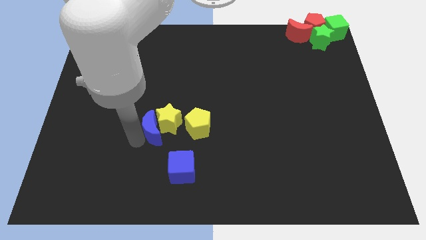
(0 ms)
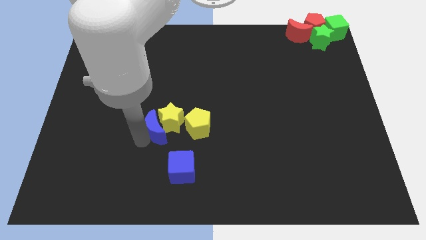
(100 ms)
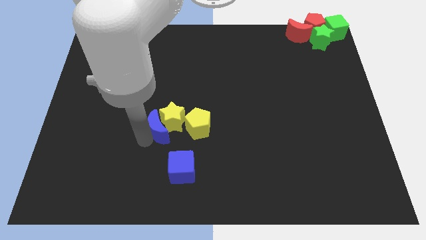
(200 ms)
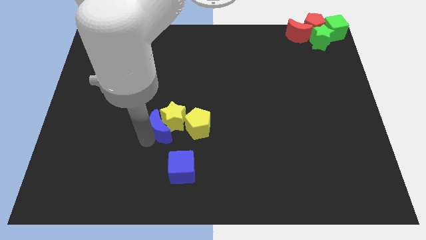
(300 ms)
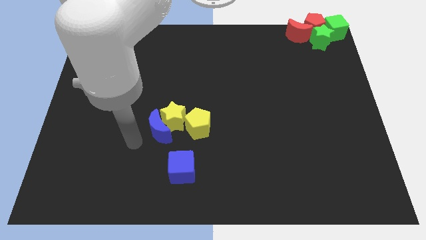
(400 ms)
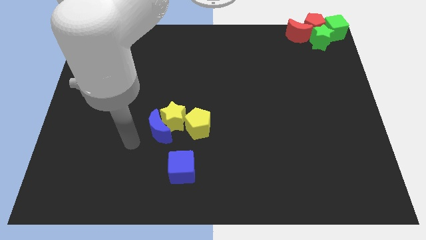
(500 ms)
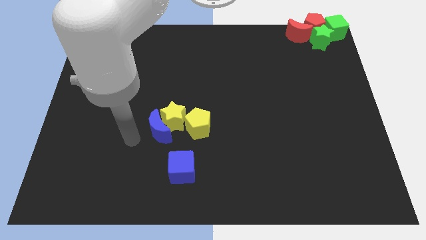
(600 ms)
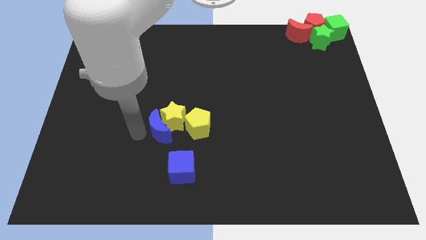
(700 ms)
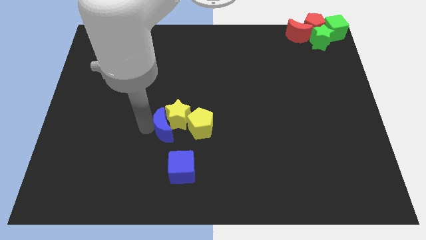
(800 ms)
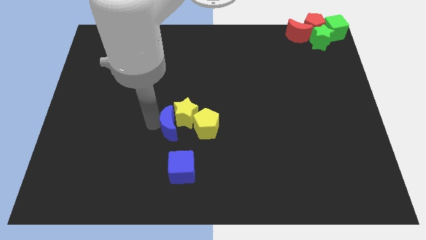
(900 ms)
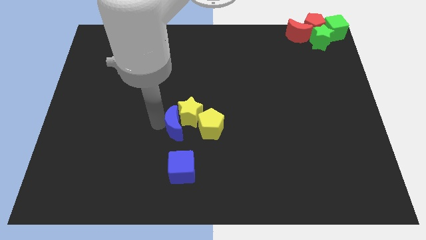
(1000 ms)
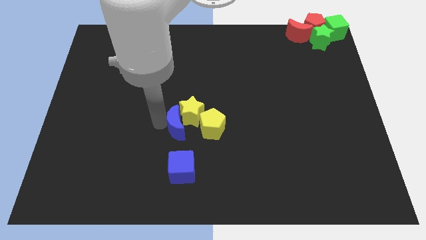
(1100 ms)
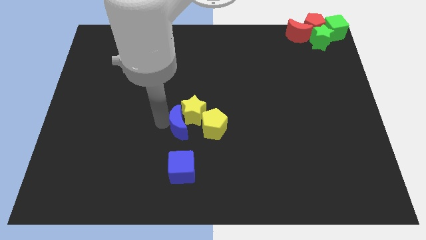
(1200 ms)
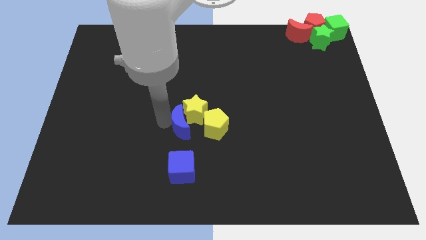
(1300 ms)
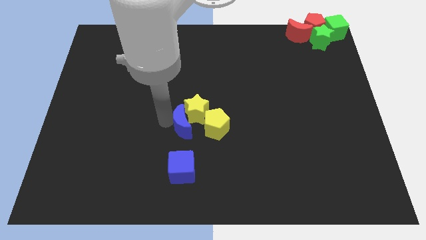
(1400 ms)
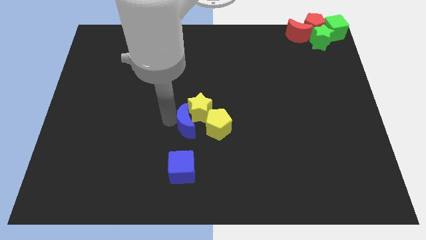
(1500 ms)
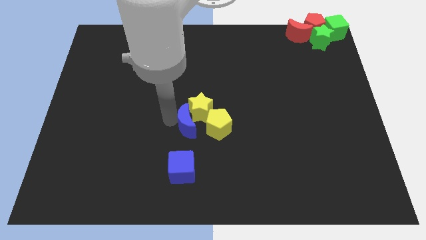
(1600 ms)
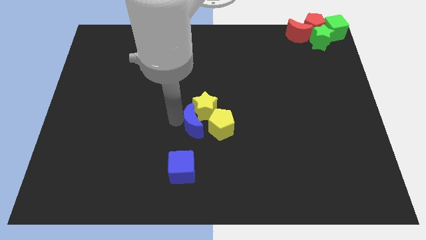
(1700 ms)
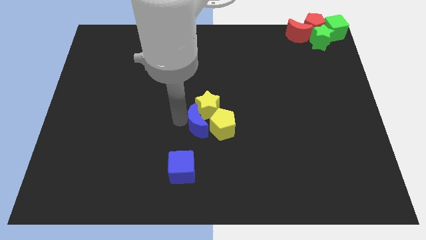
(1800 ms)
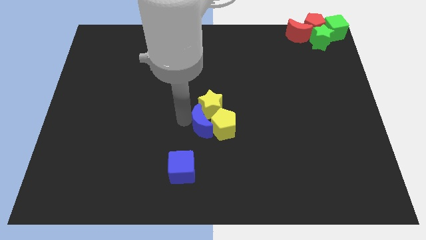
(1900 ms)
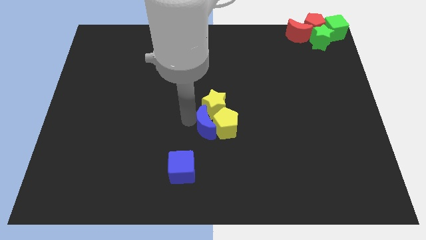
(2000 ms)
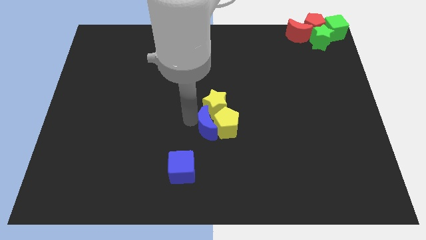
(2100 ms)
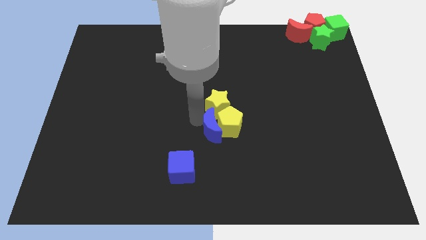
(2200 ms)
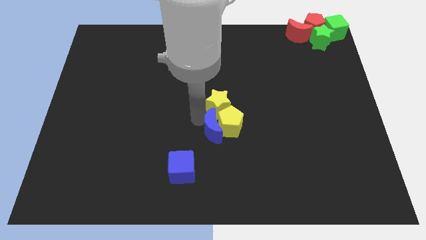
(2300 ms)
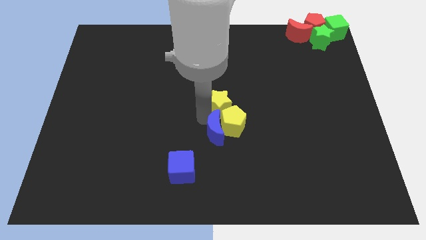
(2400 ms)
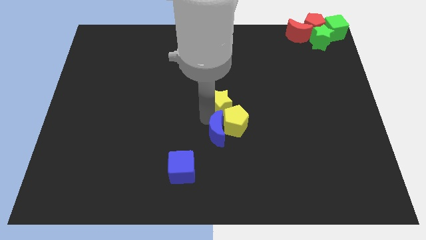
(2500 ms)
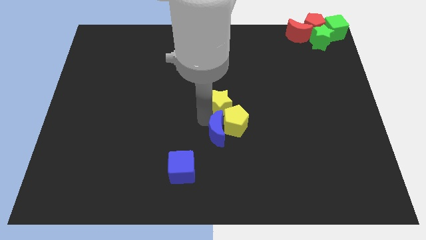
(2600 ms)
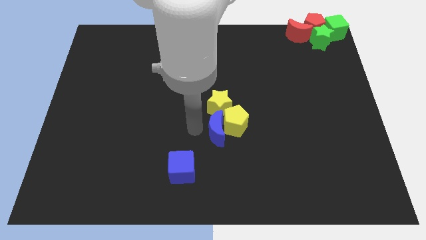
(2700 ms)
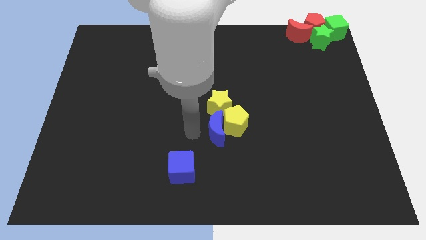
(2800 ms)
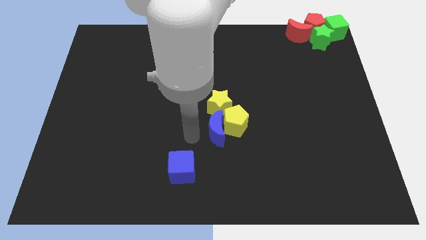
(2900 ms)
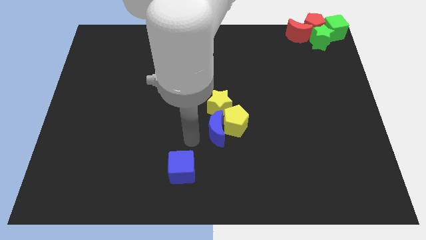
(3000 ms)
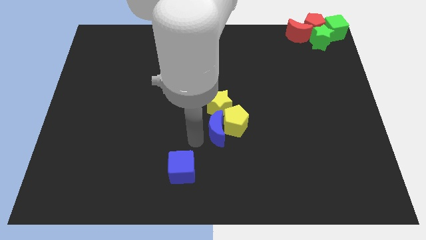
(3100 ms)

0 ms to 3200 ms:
push blue crescent and yellow blocks at the center

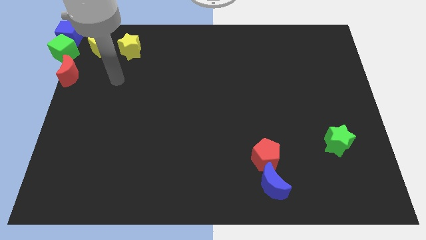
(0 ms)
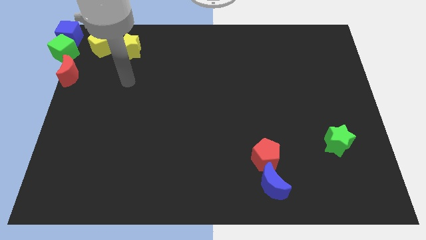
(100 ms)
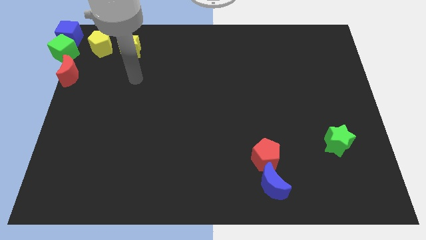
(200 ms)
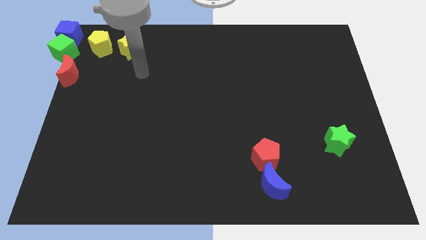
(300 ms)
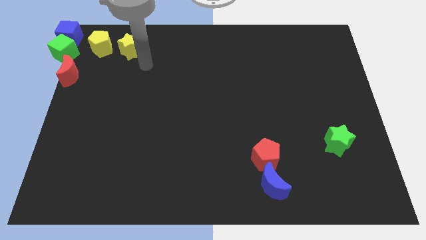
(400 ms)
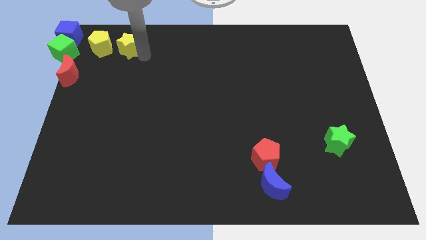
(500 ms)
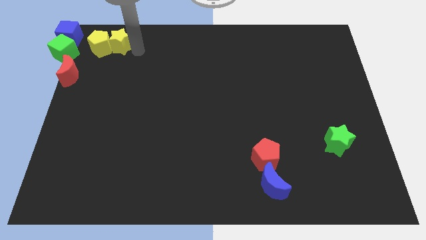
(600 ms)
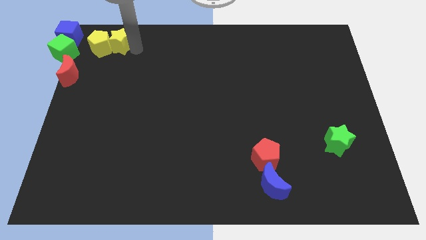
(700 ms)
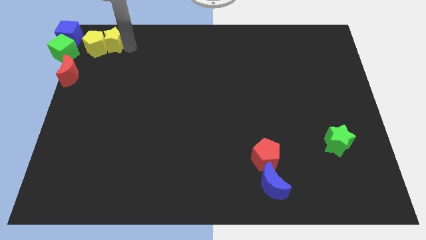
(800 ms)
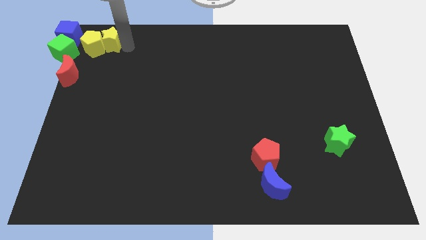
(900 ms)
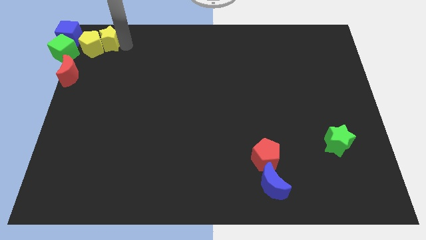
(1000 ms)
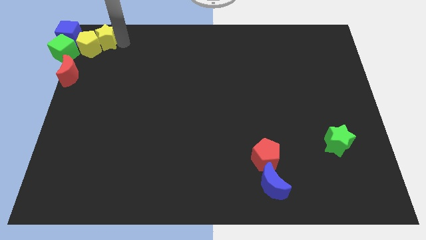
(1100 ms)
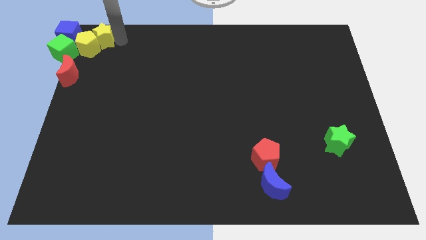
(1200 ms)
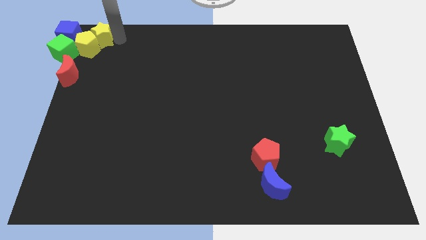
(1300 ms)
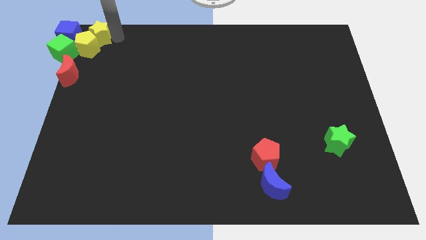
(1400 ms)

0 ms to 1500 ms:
push the yellow blocks into the green cube

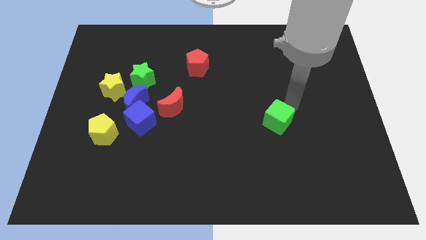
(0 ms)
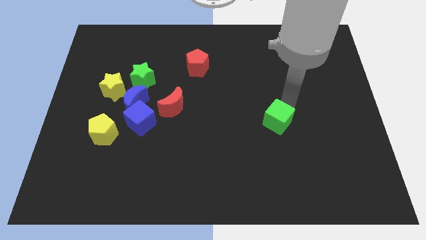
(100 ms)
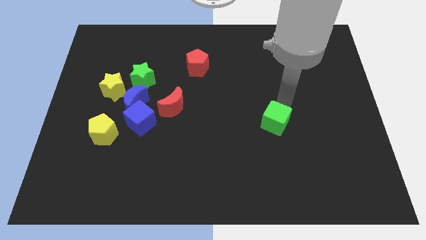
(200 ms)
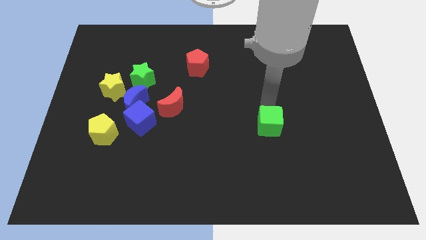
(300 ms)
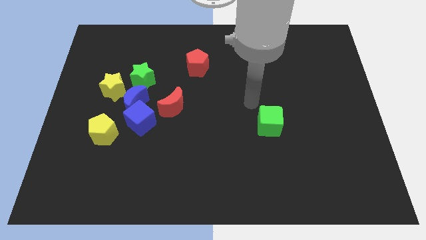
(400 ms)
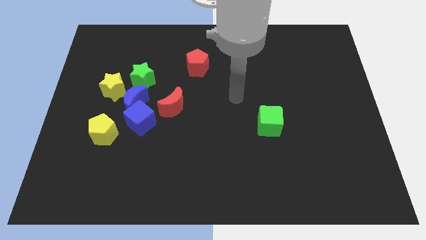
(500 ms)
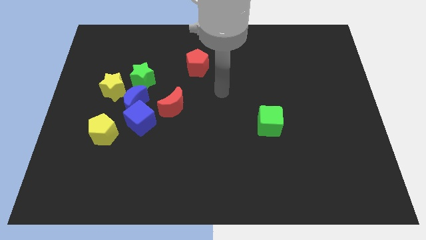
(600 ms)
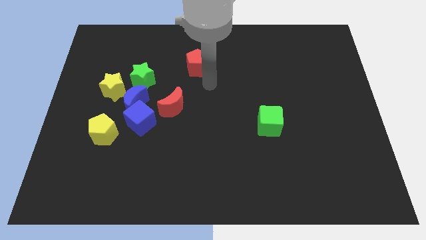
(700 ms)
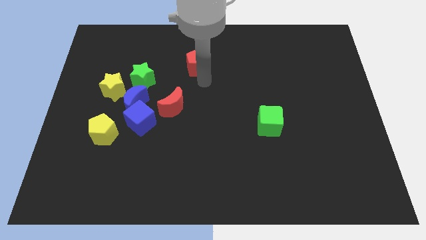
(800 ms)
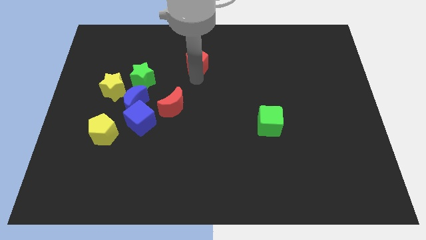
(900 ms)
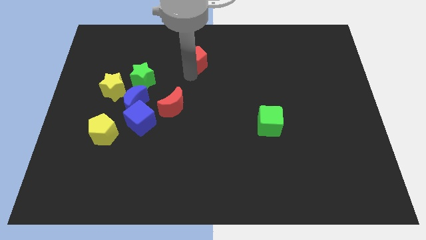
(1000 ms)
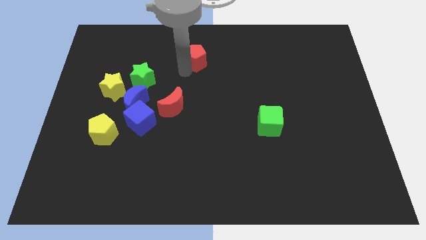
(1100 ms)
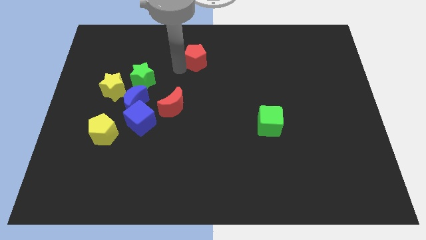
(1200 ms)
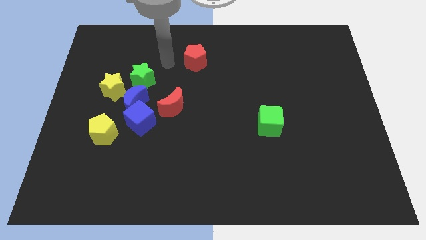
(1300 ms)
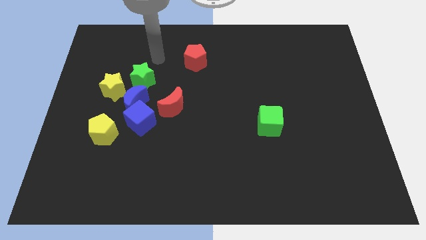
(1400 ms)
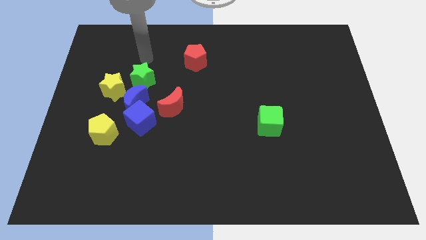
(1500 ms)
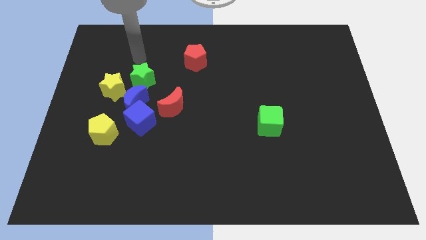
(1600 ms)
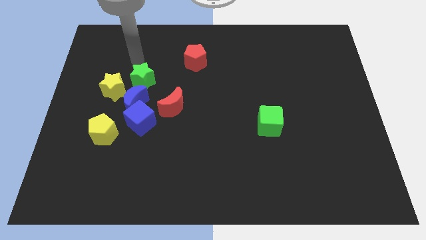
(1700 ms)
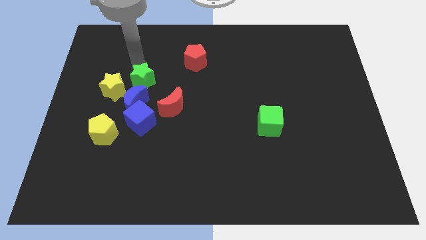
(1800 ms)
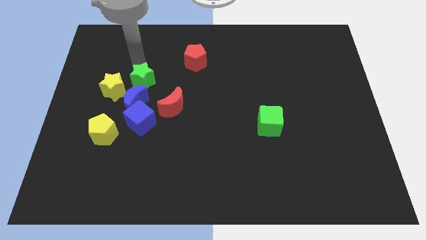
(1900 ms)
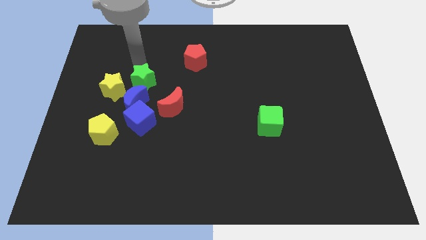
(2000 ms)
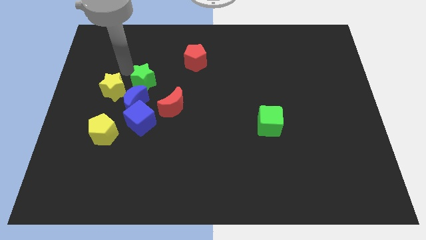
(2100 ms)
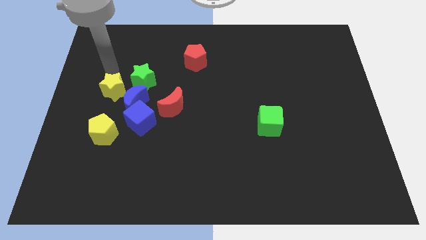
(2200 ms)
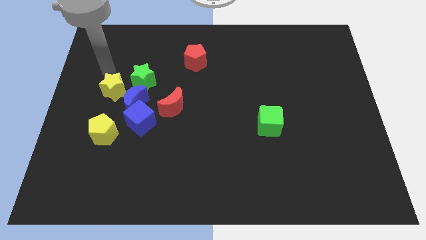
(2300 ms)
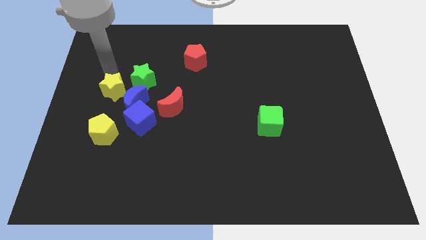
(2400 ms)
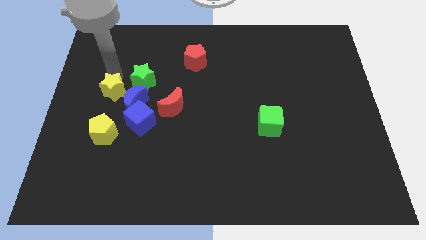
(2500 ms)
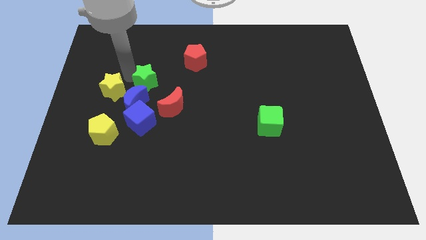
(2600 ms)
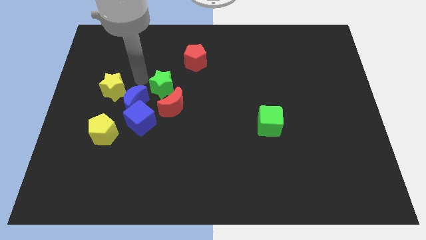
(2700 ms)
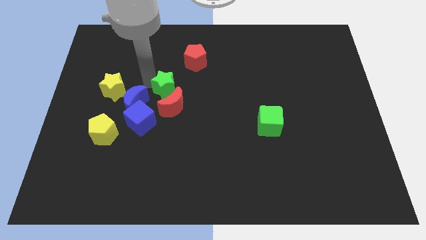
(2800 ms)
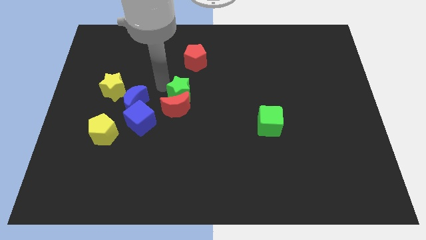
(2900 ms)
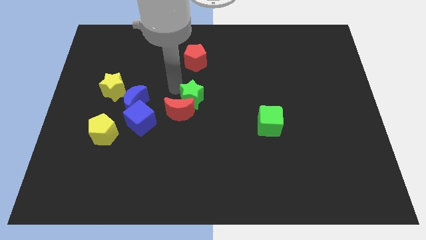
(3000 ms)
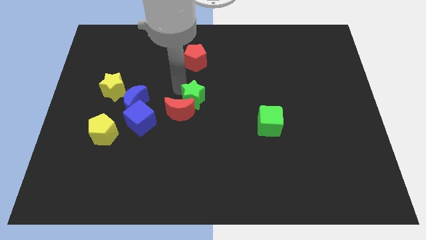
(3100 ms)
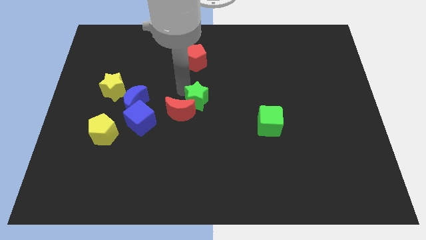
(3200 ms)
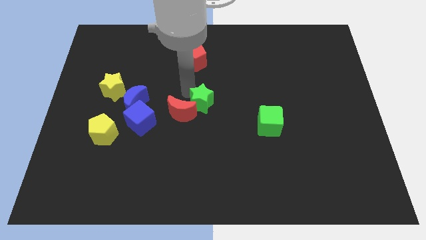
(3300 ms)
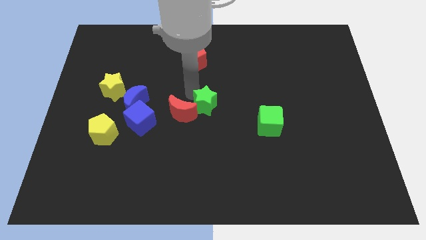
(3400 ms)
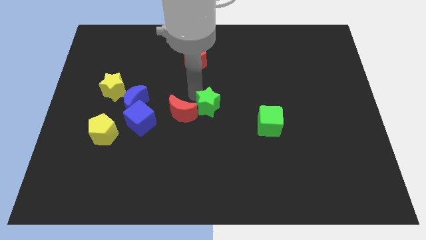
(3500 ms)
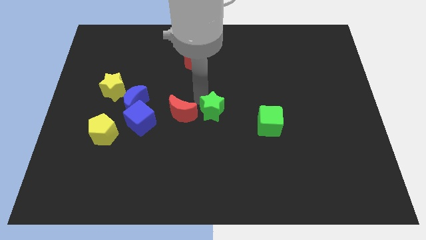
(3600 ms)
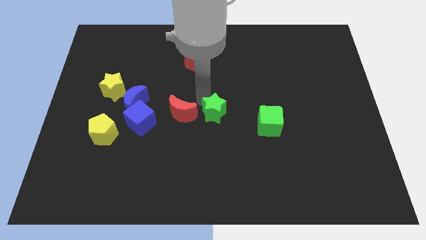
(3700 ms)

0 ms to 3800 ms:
slide the green star parallel to the right of the red moon

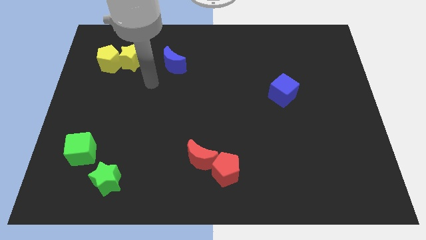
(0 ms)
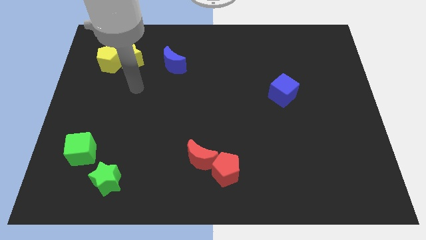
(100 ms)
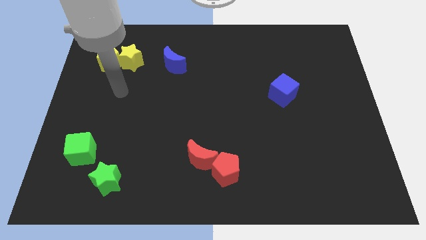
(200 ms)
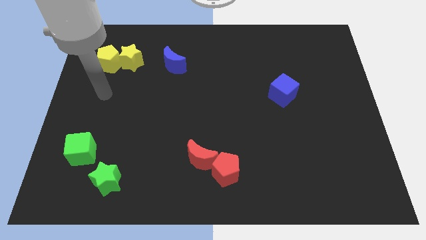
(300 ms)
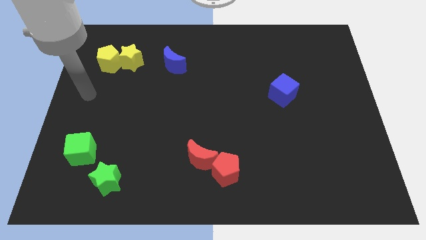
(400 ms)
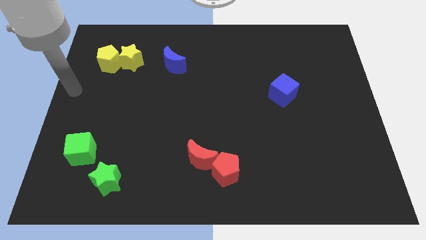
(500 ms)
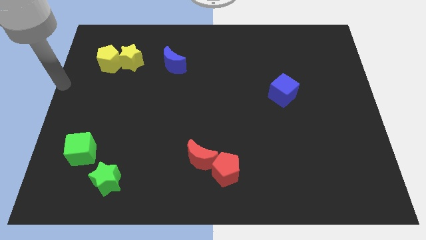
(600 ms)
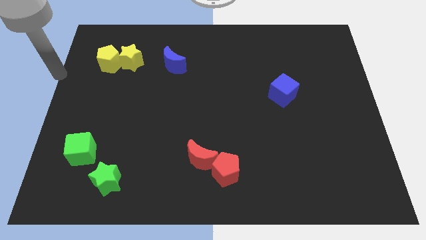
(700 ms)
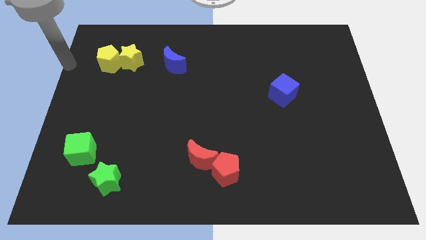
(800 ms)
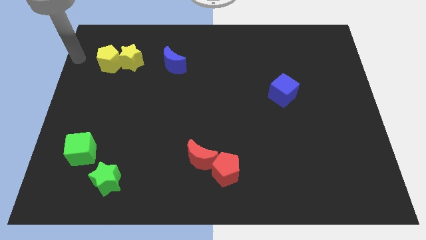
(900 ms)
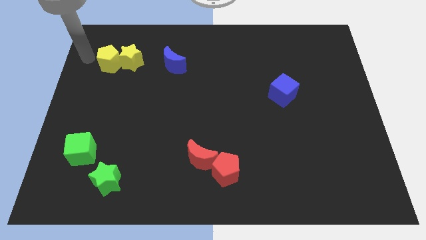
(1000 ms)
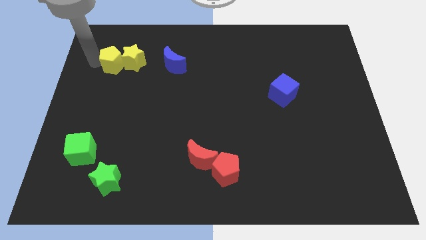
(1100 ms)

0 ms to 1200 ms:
place your arm left to the yellow pentagon
